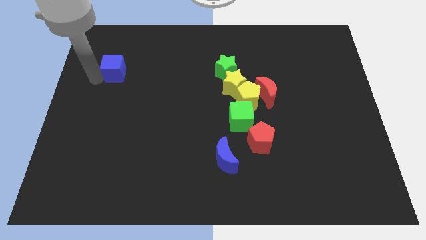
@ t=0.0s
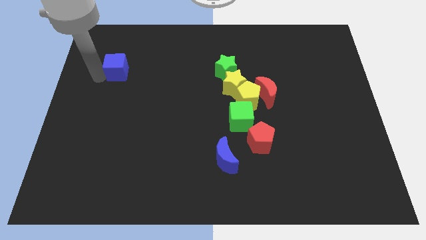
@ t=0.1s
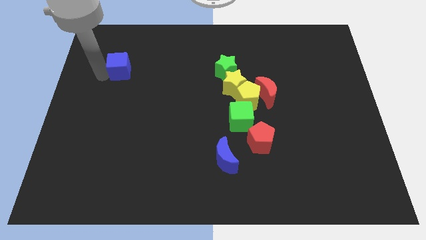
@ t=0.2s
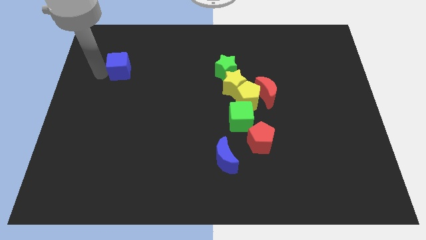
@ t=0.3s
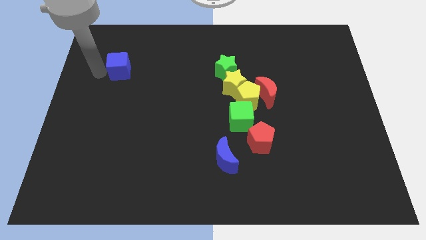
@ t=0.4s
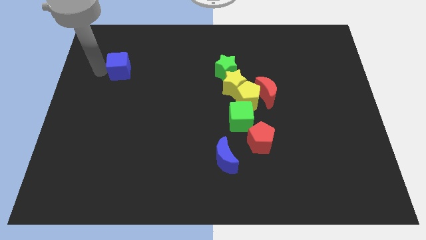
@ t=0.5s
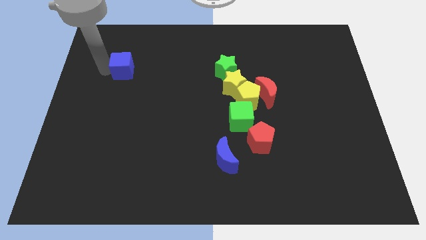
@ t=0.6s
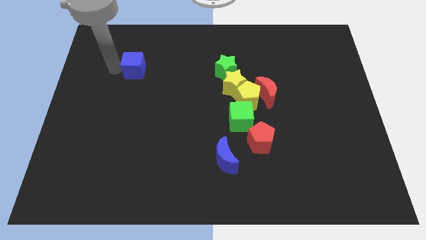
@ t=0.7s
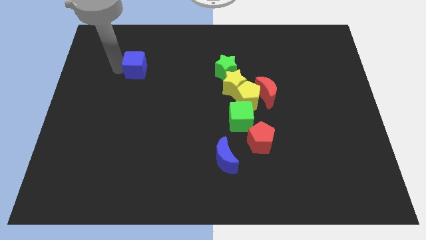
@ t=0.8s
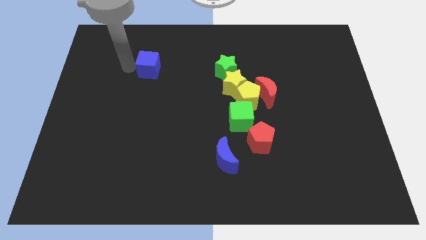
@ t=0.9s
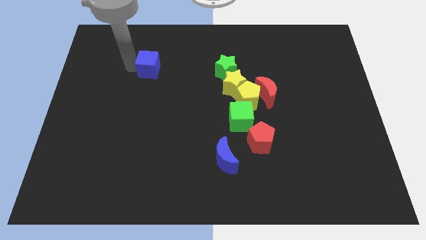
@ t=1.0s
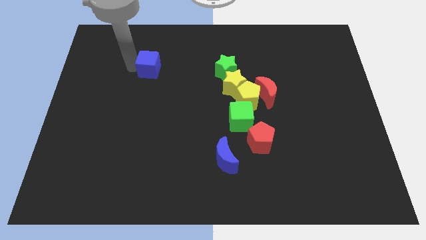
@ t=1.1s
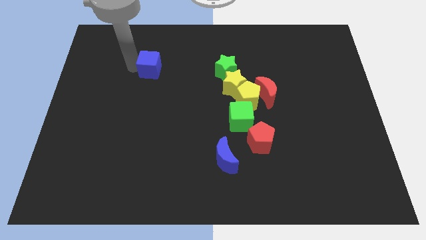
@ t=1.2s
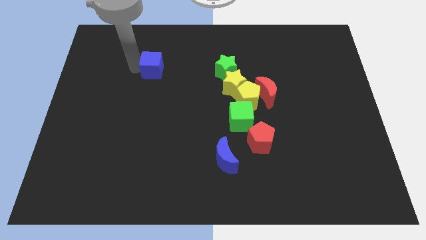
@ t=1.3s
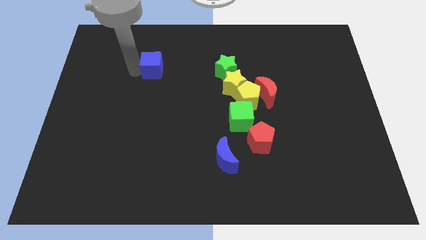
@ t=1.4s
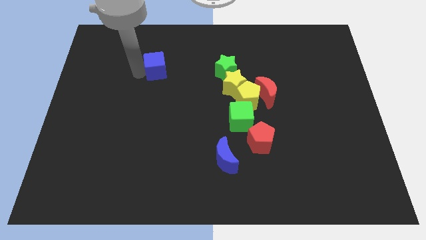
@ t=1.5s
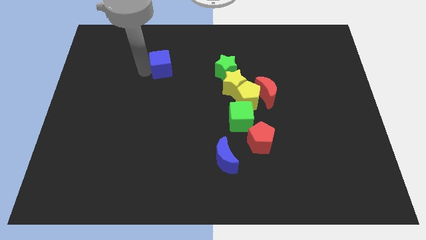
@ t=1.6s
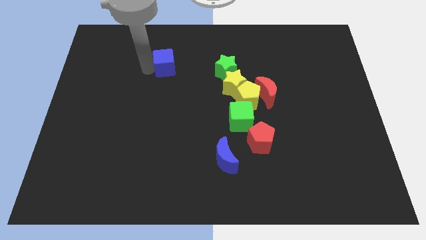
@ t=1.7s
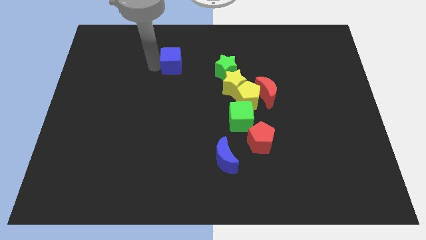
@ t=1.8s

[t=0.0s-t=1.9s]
slightly move the blue cube towards the right side of the board

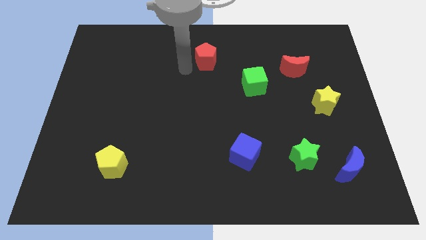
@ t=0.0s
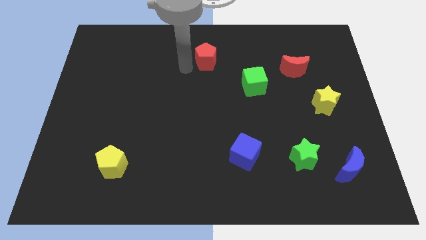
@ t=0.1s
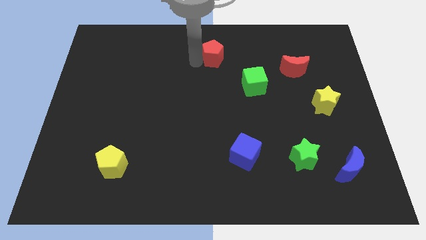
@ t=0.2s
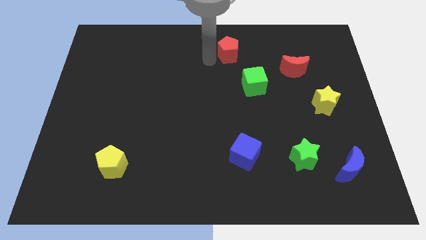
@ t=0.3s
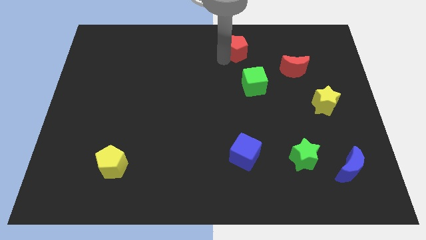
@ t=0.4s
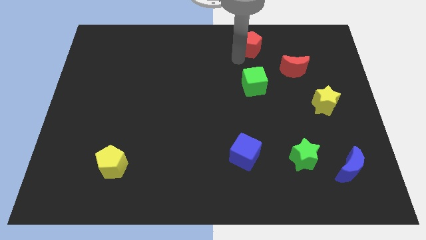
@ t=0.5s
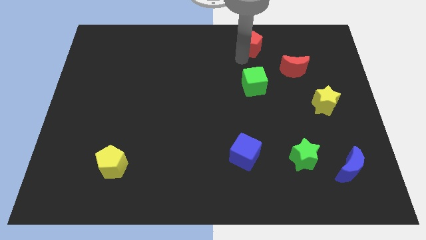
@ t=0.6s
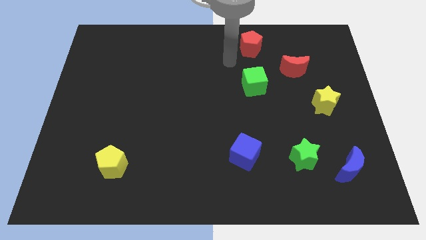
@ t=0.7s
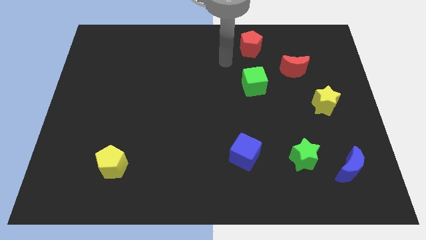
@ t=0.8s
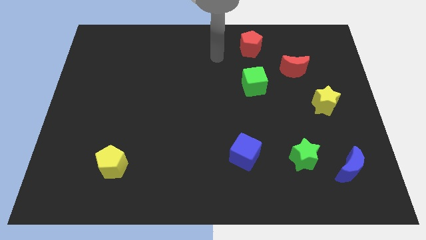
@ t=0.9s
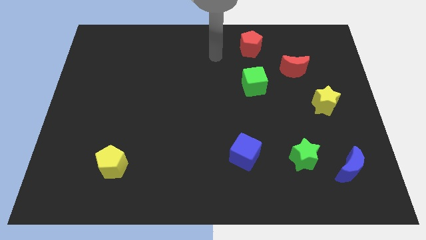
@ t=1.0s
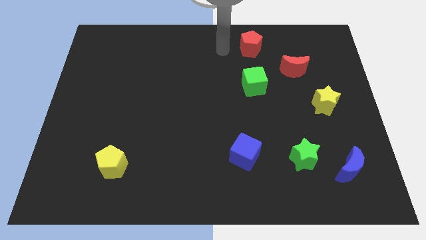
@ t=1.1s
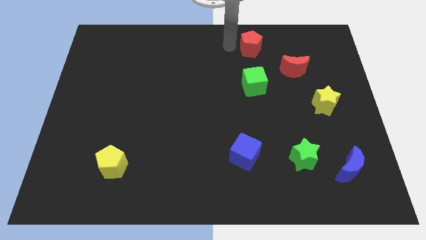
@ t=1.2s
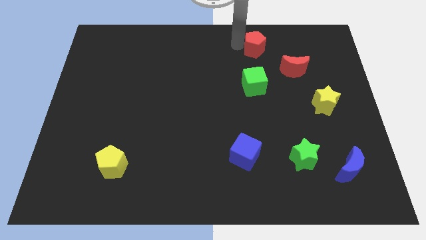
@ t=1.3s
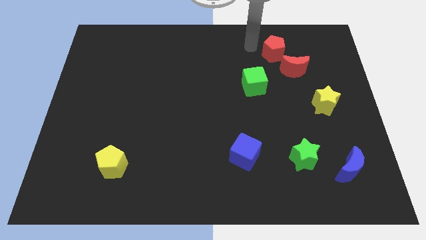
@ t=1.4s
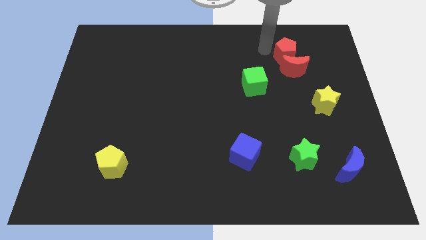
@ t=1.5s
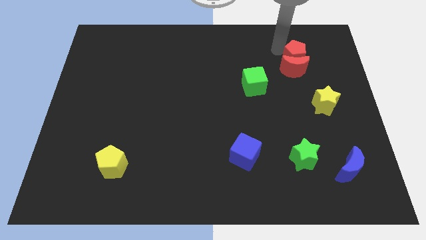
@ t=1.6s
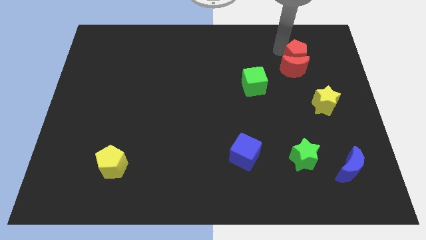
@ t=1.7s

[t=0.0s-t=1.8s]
put the red pentagon above the red moon

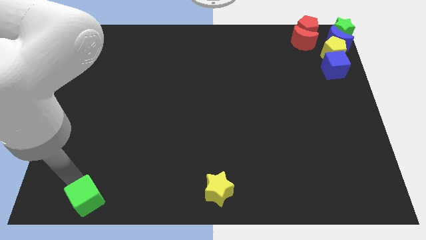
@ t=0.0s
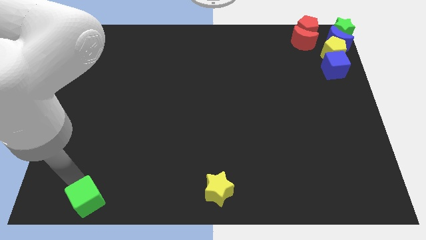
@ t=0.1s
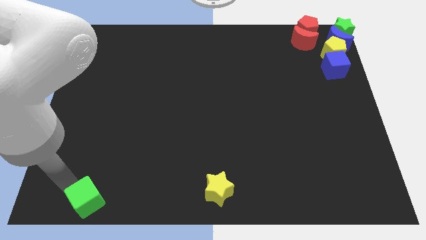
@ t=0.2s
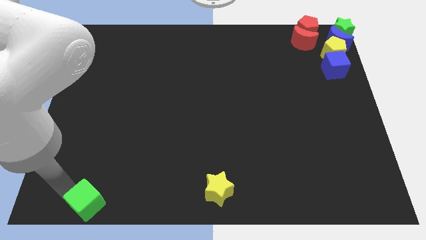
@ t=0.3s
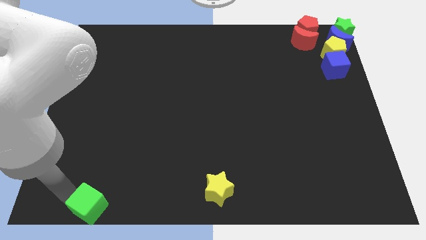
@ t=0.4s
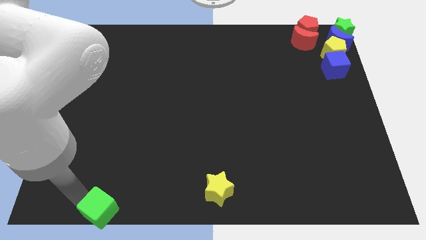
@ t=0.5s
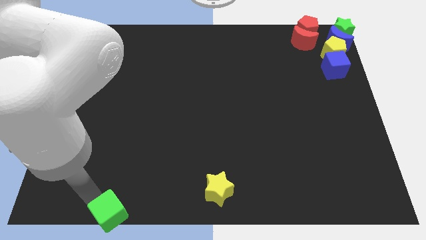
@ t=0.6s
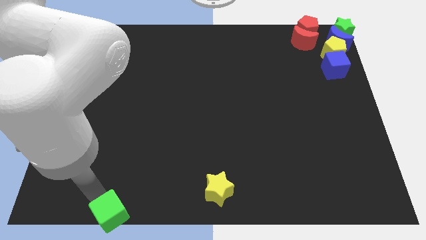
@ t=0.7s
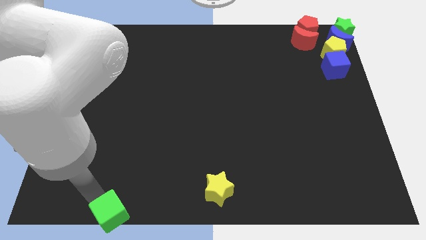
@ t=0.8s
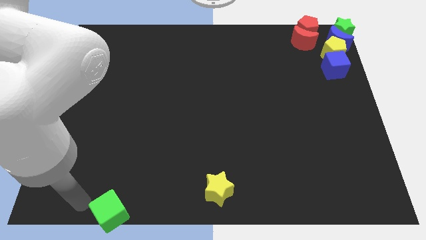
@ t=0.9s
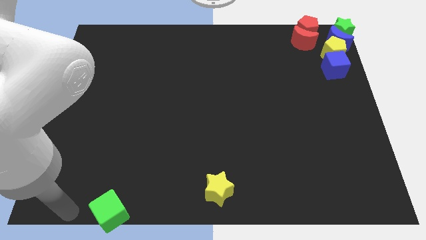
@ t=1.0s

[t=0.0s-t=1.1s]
push the green cube to the bottom right of the board

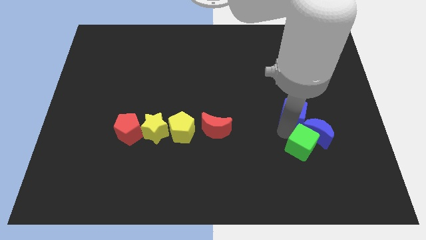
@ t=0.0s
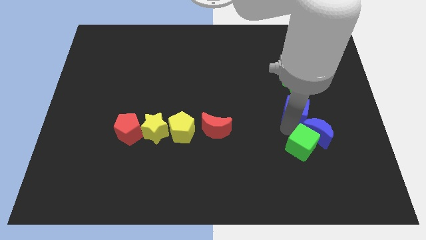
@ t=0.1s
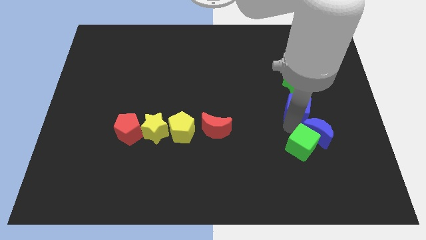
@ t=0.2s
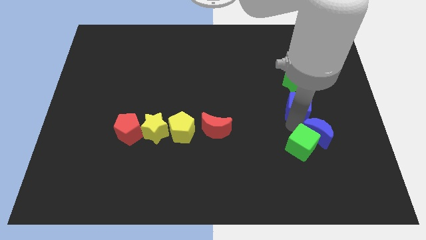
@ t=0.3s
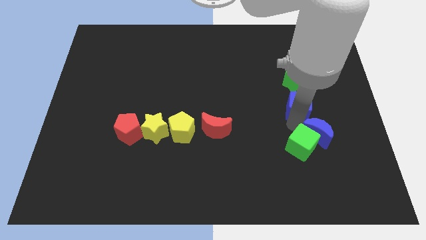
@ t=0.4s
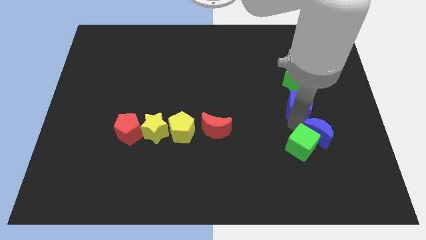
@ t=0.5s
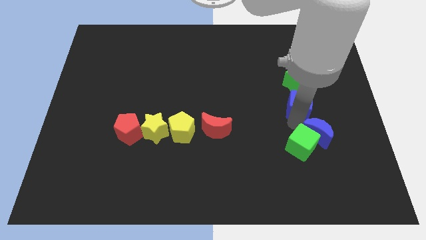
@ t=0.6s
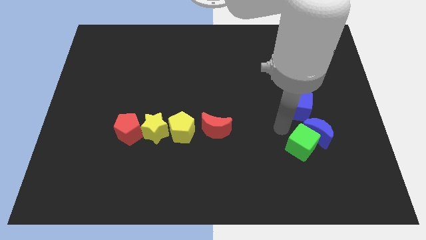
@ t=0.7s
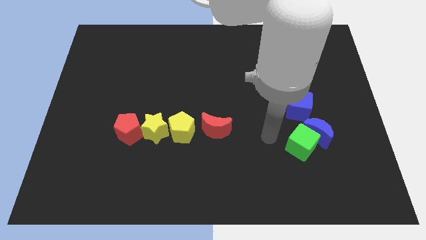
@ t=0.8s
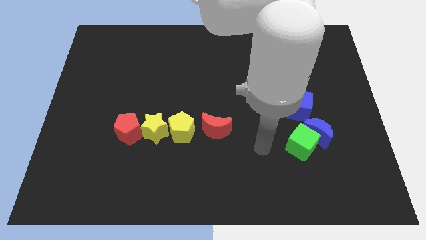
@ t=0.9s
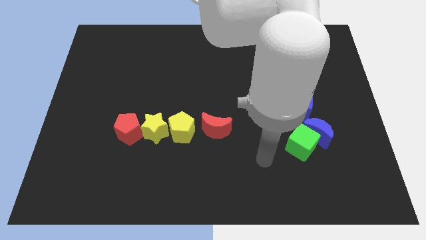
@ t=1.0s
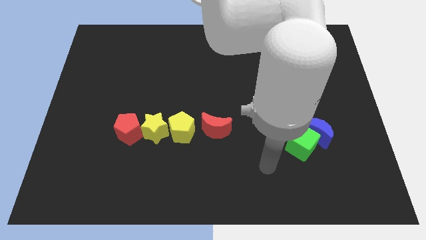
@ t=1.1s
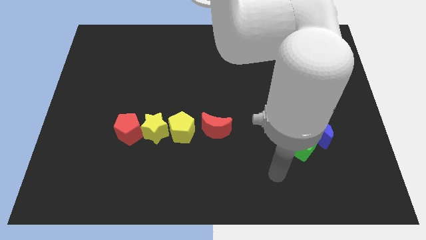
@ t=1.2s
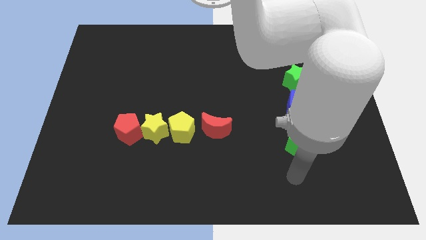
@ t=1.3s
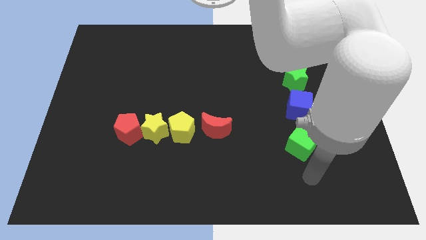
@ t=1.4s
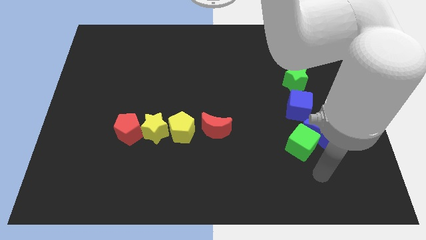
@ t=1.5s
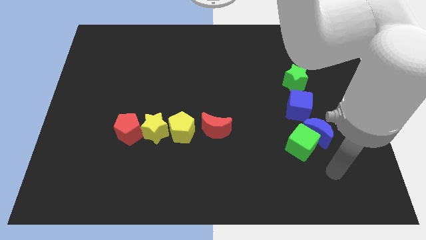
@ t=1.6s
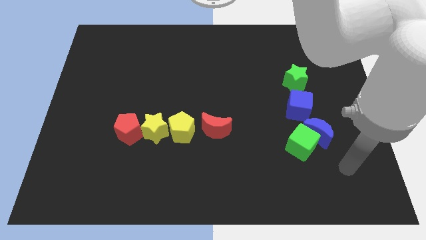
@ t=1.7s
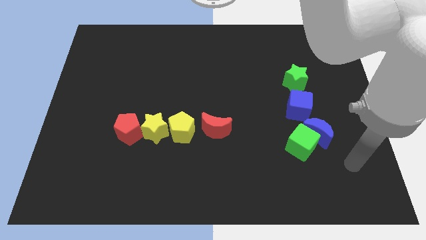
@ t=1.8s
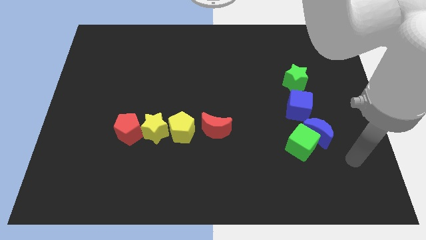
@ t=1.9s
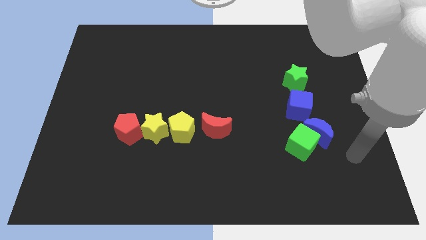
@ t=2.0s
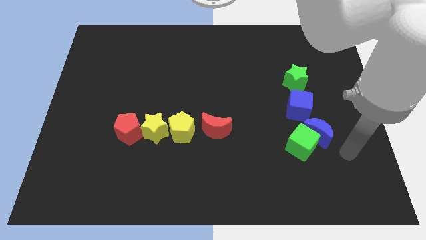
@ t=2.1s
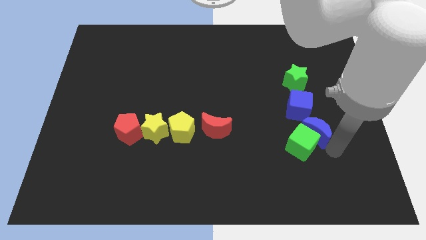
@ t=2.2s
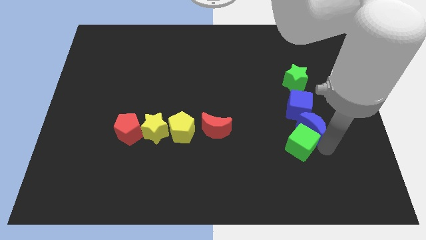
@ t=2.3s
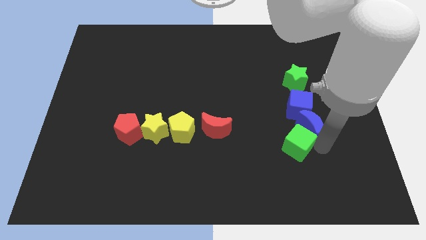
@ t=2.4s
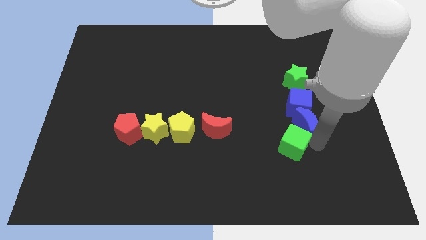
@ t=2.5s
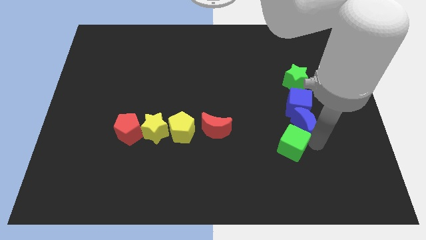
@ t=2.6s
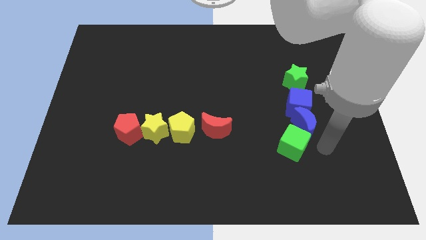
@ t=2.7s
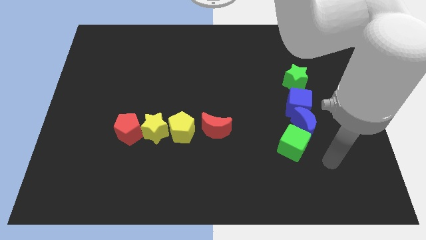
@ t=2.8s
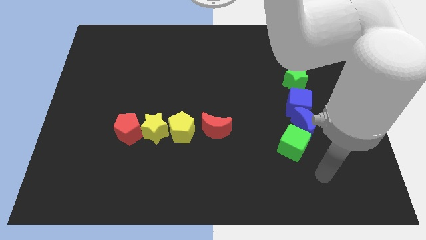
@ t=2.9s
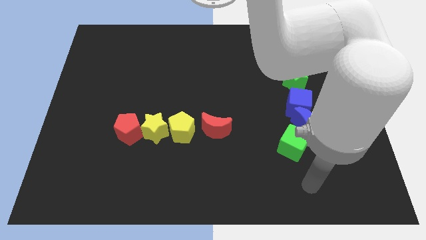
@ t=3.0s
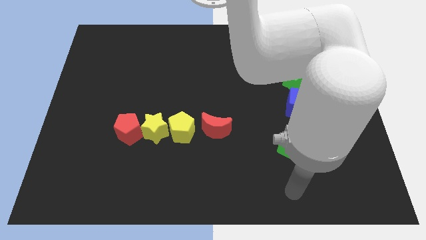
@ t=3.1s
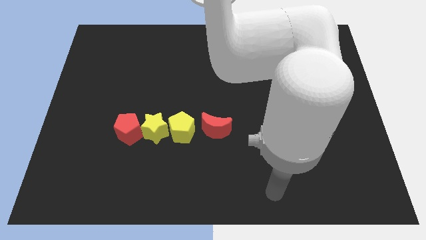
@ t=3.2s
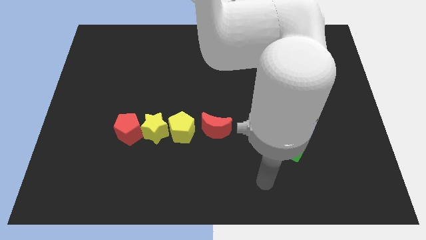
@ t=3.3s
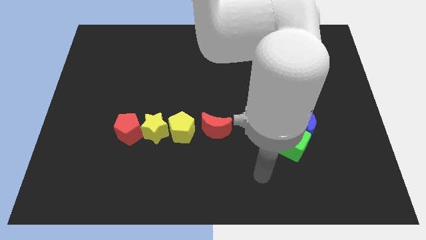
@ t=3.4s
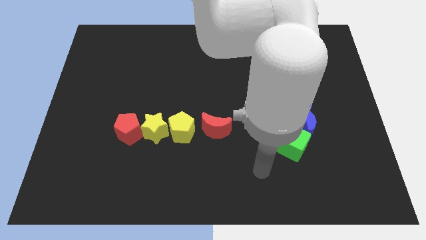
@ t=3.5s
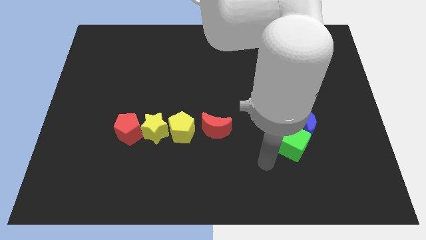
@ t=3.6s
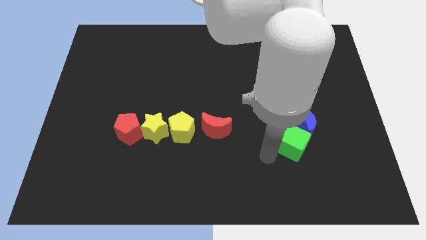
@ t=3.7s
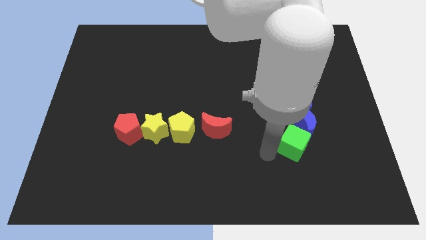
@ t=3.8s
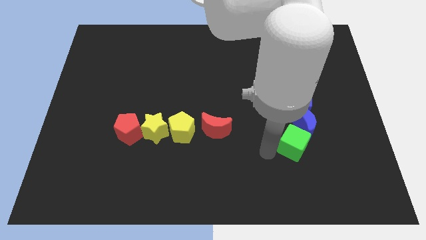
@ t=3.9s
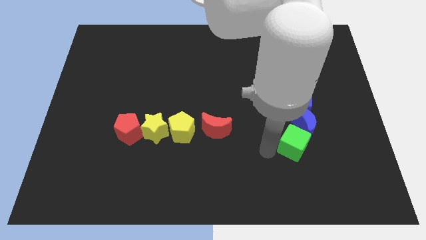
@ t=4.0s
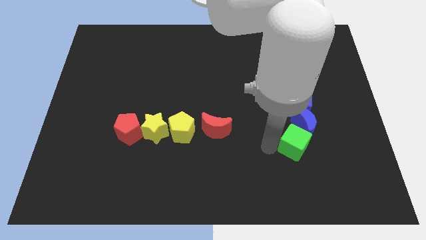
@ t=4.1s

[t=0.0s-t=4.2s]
make all green and blue blocks in a row
